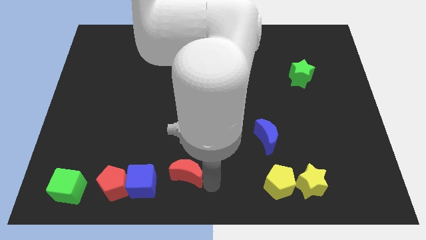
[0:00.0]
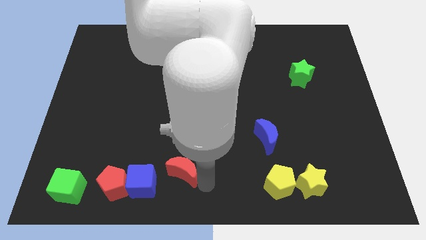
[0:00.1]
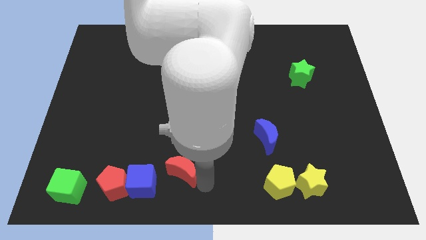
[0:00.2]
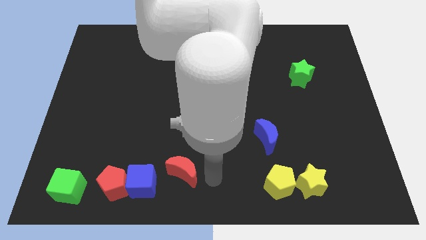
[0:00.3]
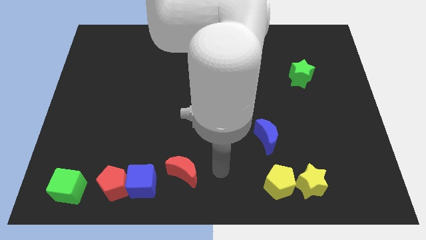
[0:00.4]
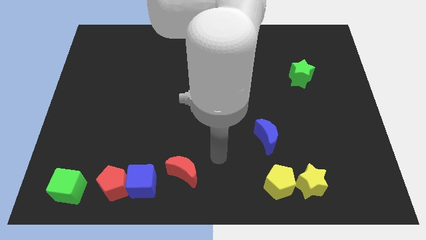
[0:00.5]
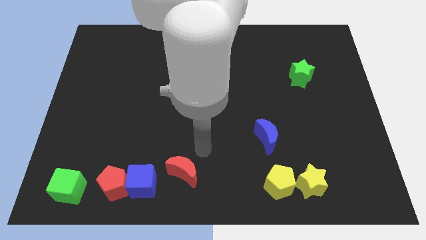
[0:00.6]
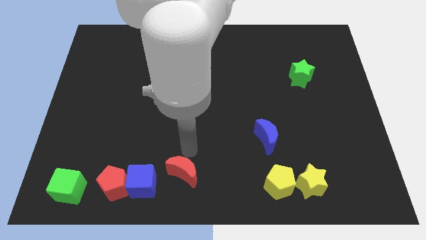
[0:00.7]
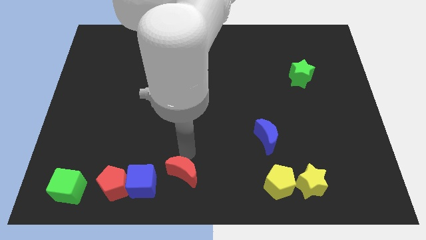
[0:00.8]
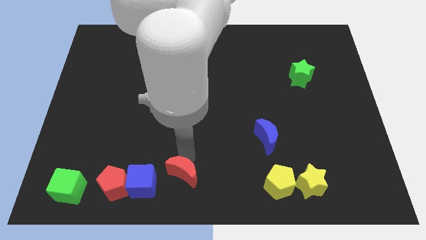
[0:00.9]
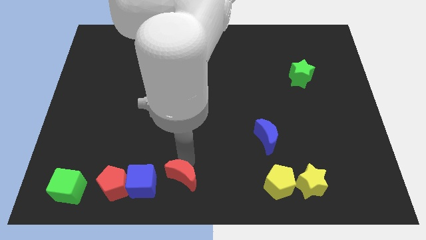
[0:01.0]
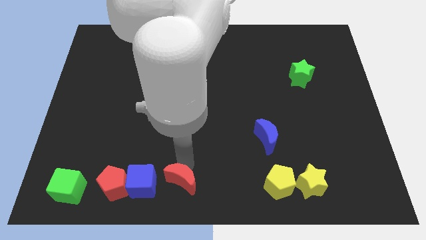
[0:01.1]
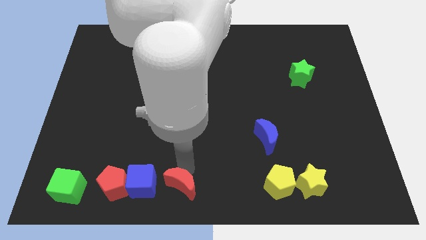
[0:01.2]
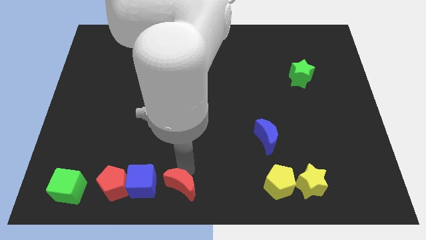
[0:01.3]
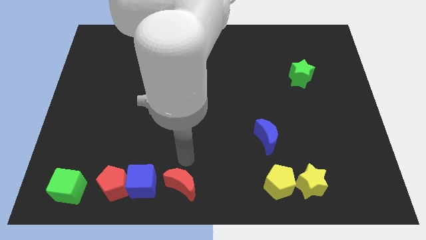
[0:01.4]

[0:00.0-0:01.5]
place the red pentagon to the right side of the blue cube

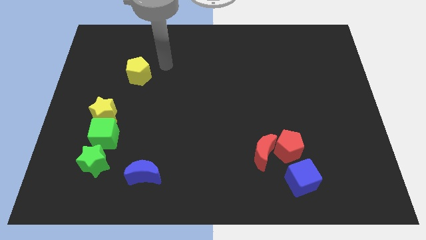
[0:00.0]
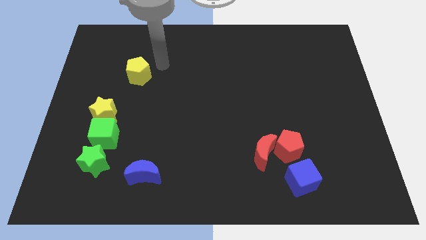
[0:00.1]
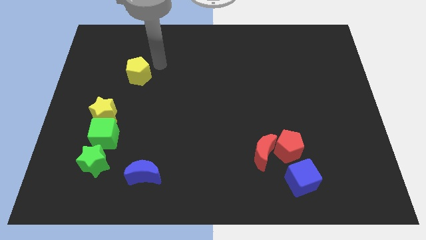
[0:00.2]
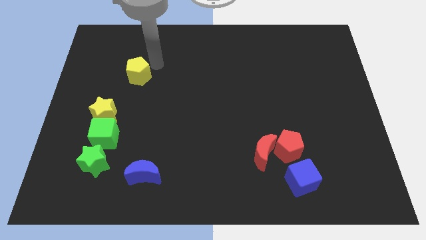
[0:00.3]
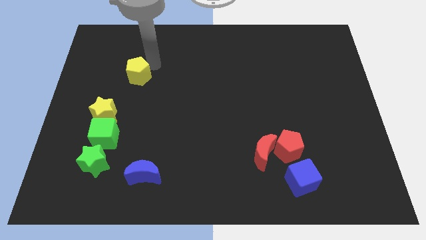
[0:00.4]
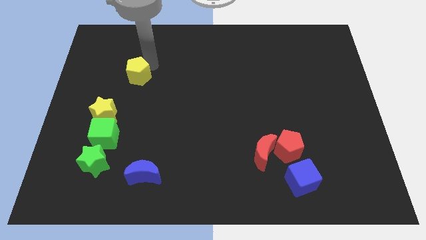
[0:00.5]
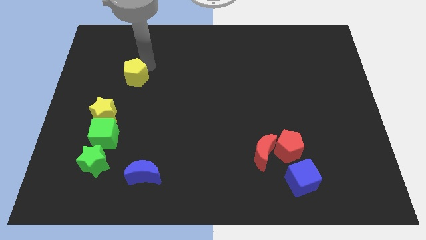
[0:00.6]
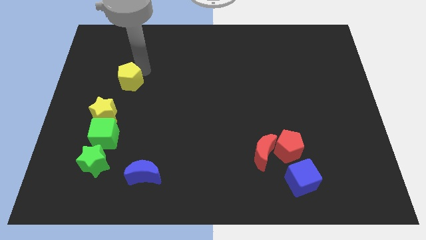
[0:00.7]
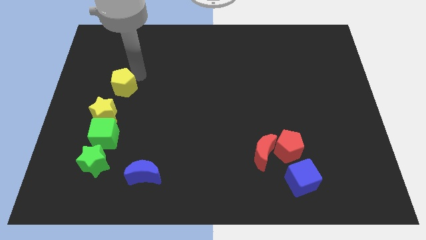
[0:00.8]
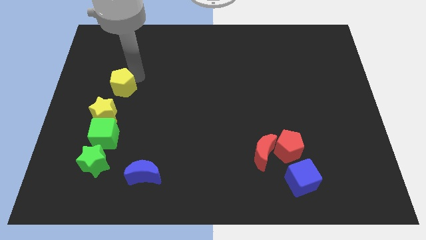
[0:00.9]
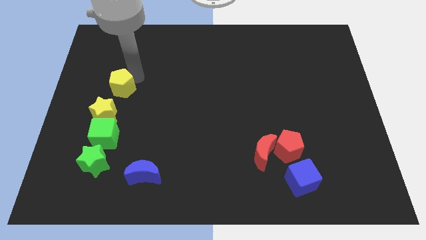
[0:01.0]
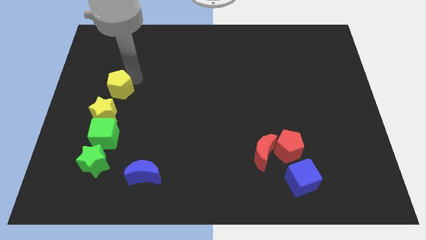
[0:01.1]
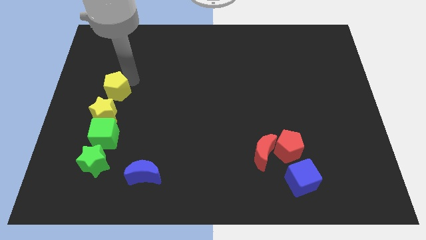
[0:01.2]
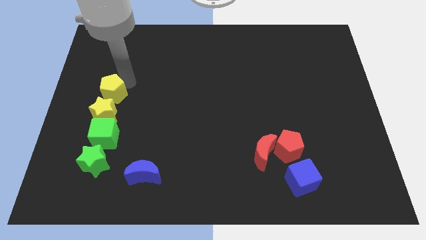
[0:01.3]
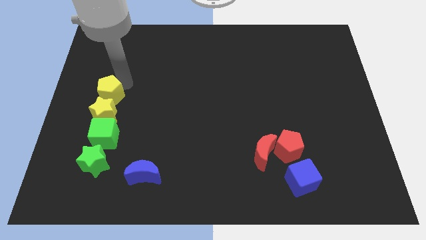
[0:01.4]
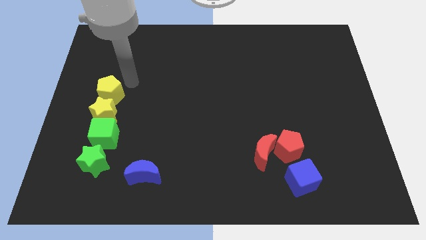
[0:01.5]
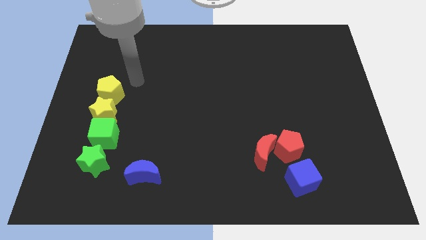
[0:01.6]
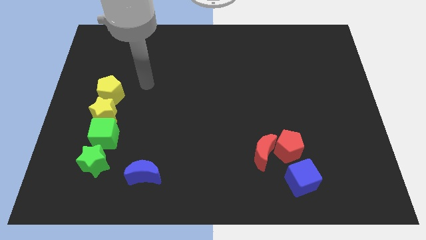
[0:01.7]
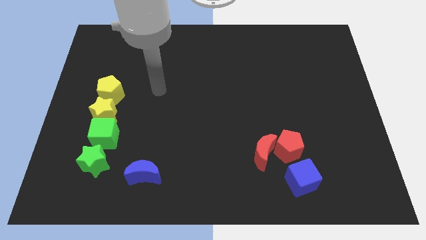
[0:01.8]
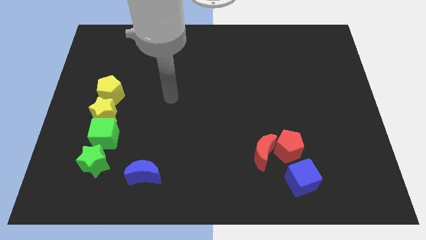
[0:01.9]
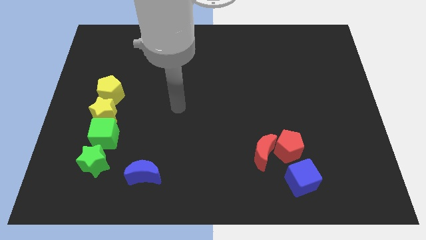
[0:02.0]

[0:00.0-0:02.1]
place yellow pentagon above the yellow star

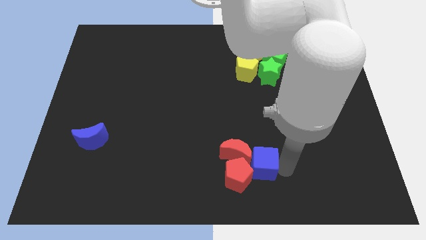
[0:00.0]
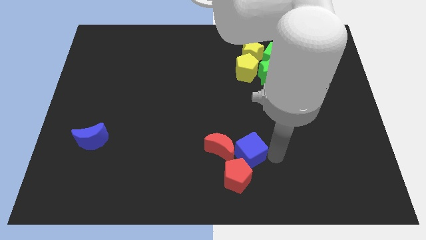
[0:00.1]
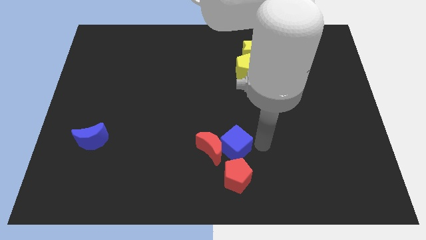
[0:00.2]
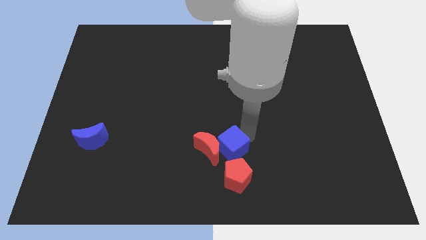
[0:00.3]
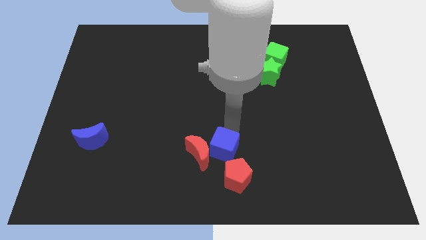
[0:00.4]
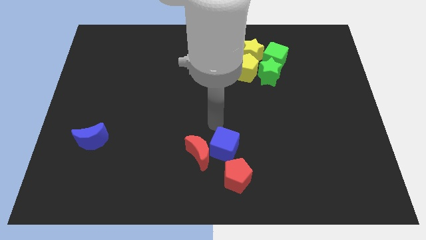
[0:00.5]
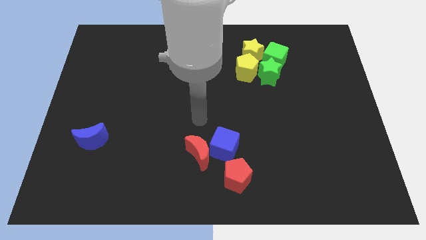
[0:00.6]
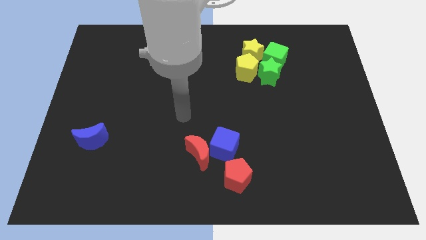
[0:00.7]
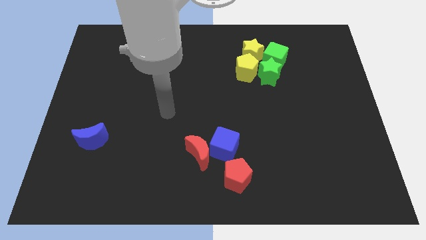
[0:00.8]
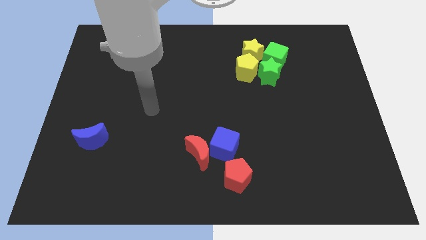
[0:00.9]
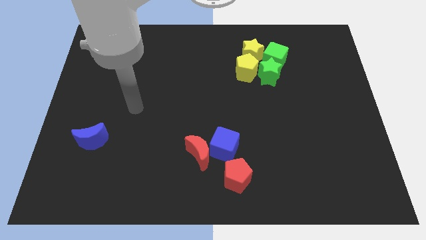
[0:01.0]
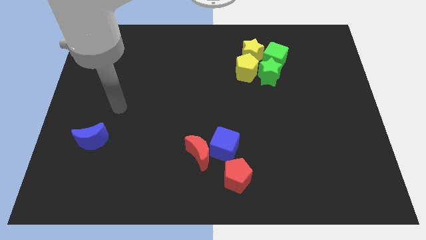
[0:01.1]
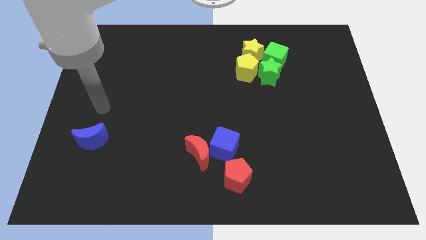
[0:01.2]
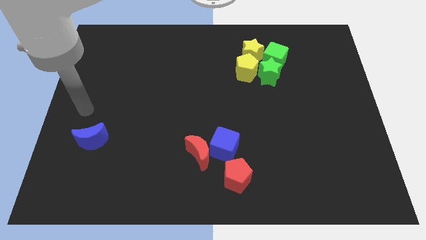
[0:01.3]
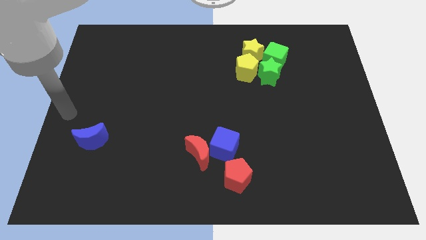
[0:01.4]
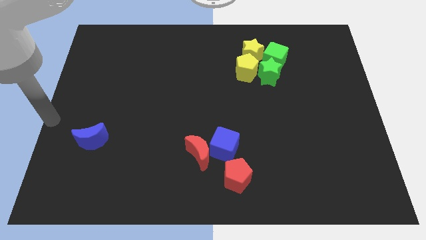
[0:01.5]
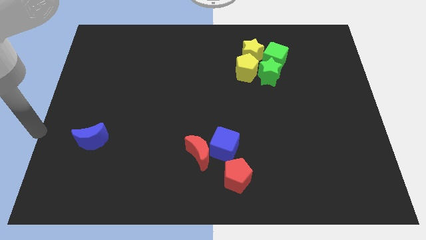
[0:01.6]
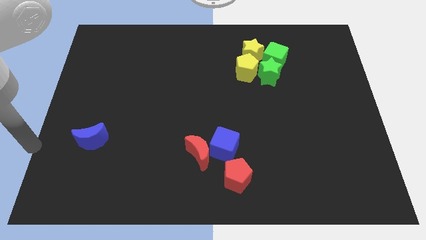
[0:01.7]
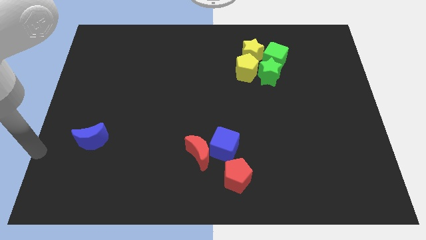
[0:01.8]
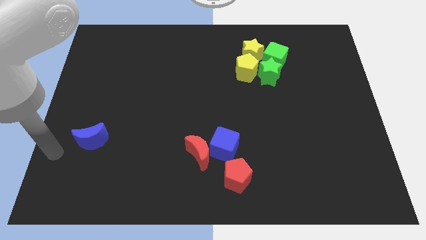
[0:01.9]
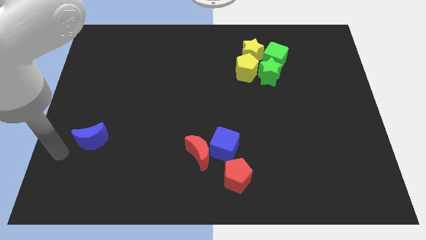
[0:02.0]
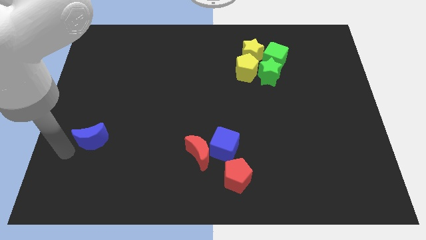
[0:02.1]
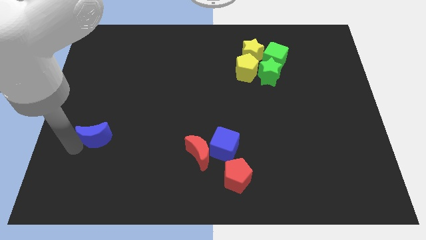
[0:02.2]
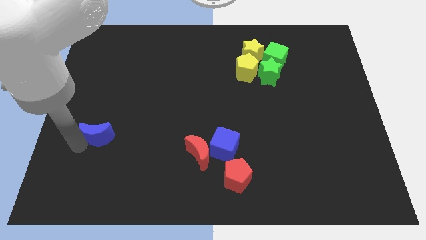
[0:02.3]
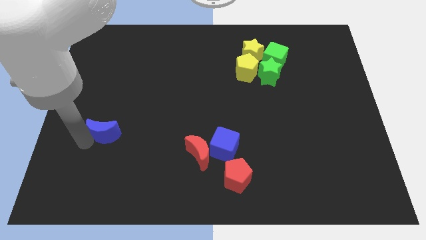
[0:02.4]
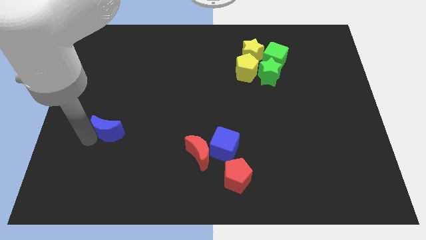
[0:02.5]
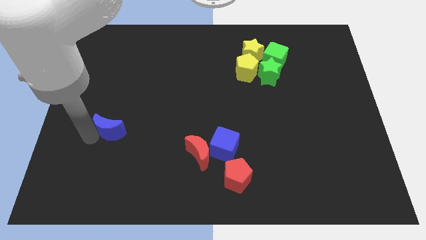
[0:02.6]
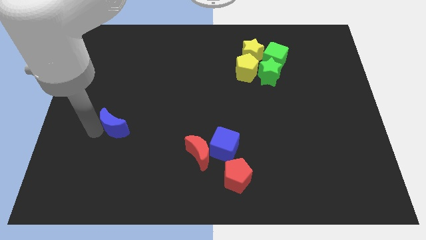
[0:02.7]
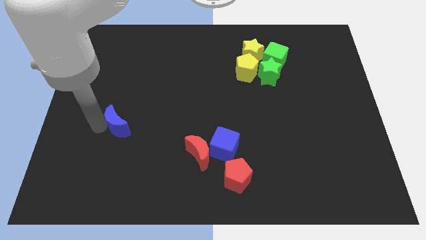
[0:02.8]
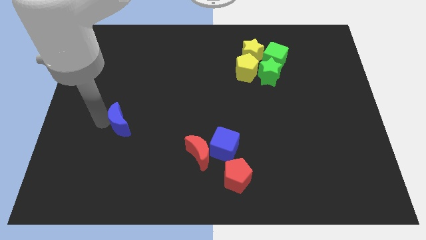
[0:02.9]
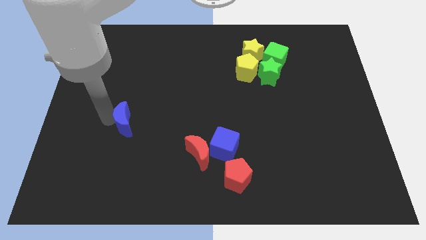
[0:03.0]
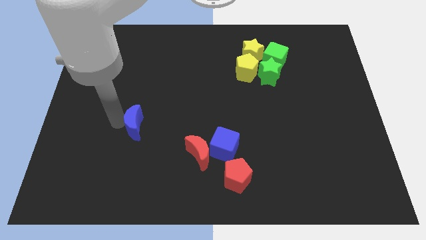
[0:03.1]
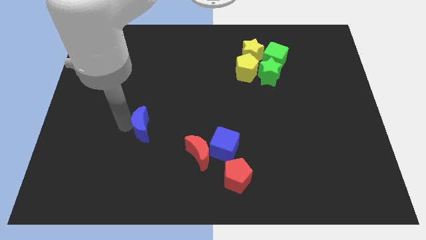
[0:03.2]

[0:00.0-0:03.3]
place the blue moon diagonally top left to red moon

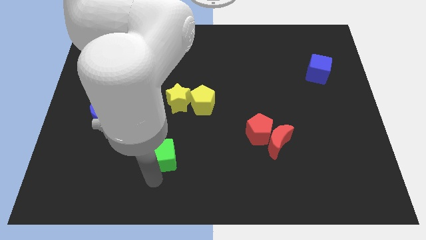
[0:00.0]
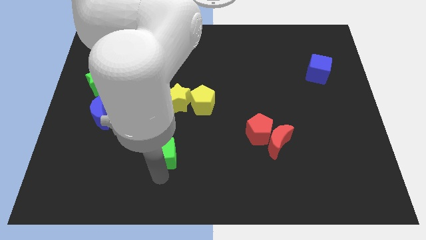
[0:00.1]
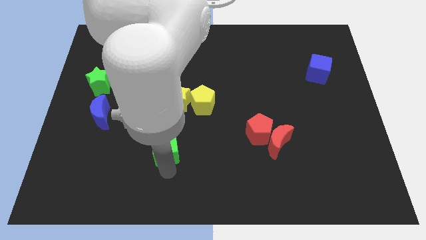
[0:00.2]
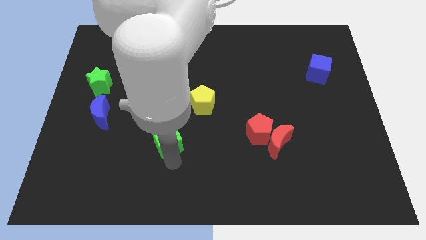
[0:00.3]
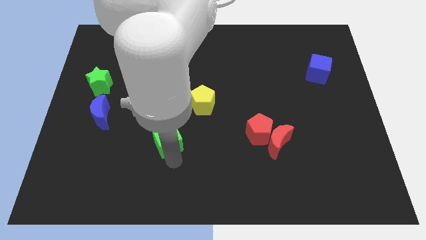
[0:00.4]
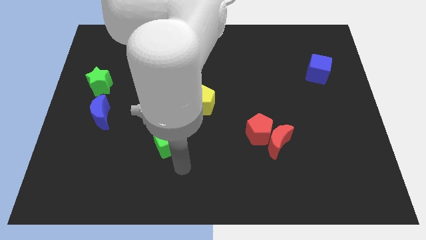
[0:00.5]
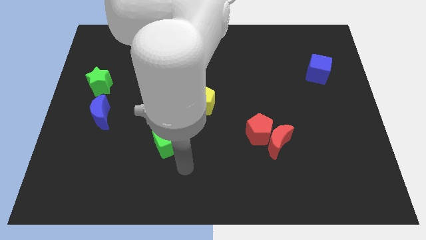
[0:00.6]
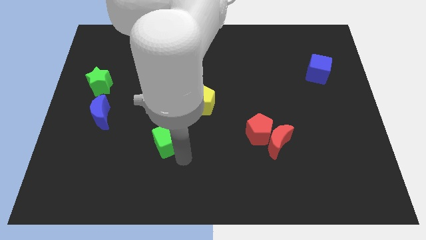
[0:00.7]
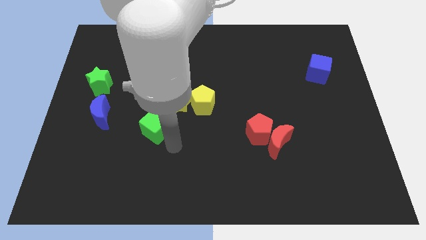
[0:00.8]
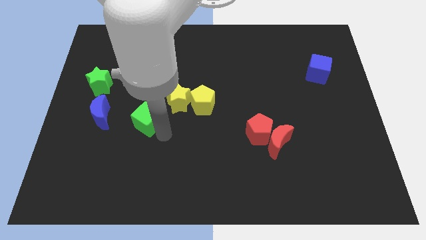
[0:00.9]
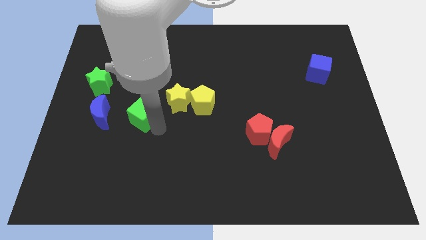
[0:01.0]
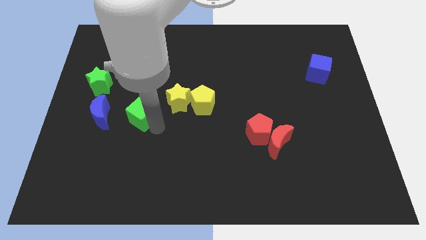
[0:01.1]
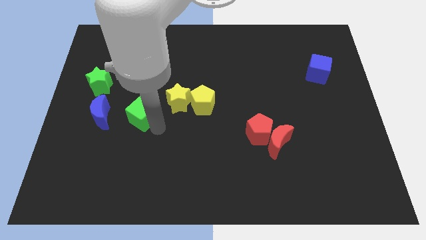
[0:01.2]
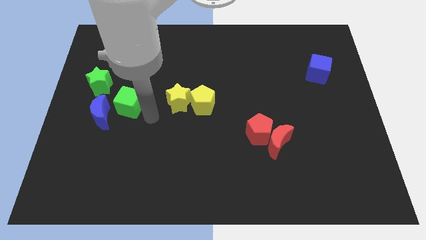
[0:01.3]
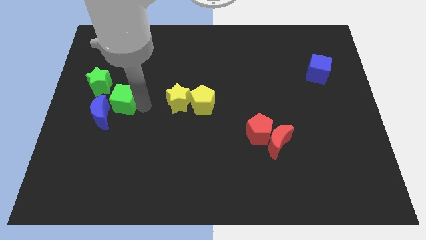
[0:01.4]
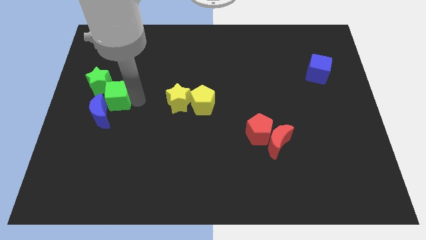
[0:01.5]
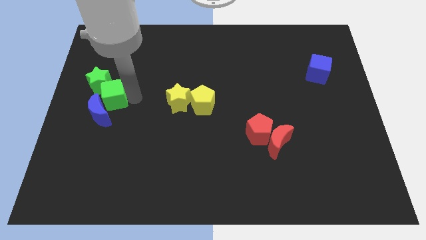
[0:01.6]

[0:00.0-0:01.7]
push the green cube at bottom right side of green star

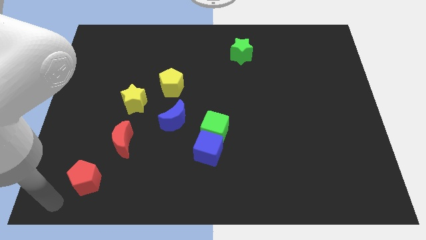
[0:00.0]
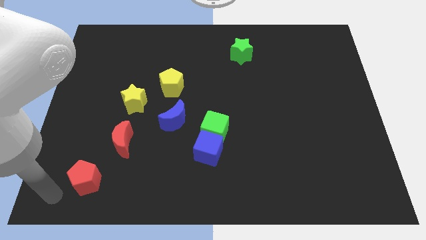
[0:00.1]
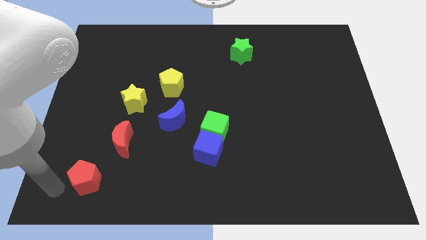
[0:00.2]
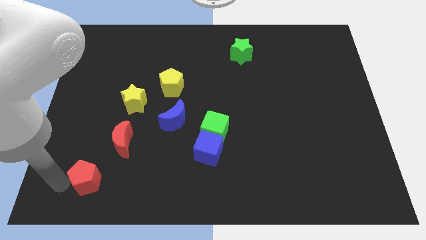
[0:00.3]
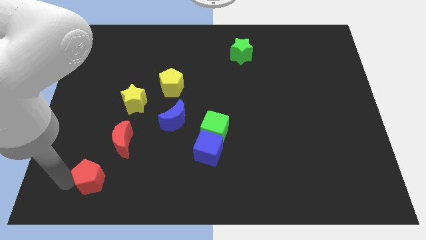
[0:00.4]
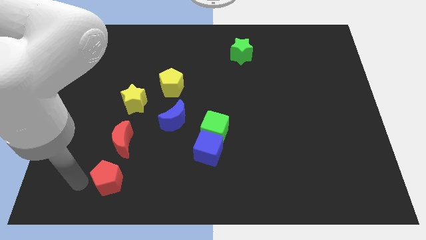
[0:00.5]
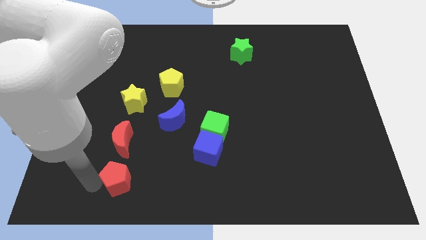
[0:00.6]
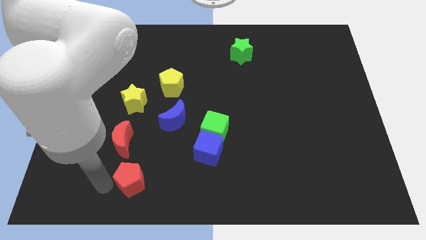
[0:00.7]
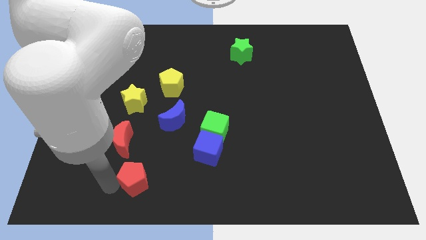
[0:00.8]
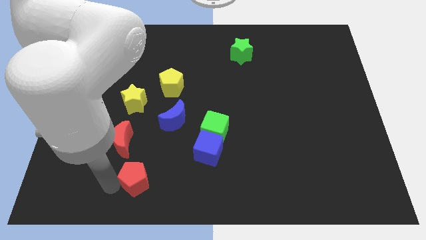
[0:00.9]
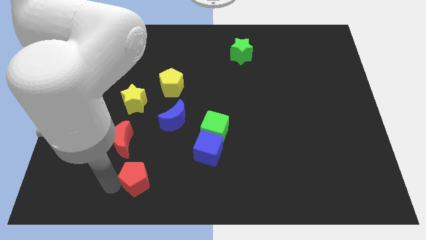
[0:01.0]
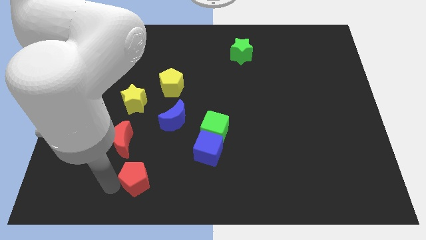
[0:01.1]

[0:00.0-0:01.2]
push the red pentagon diagonally bottom left of the blue moon
